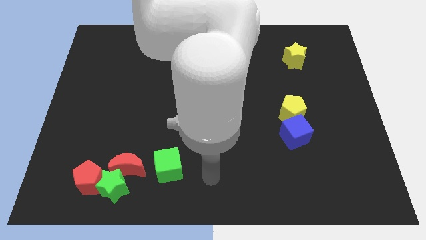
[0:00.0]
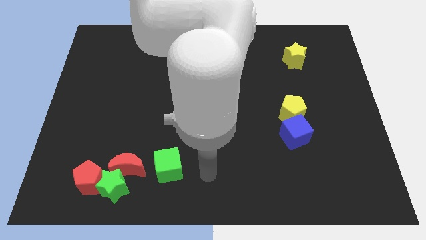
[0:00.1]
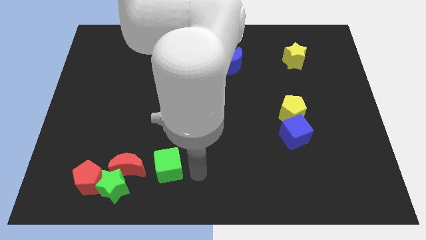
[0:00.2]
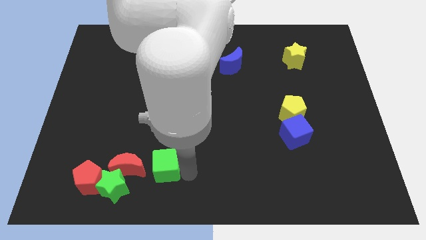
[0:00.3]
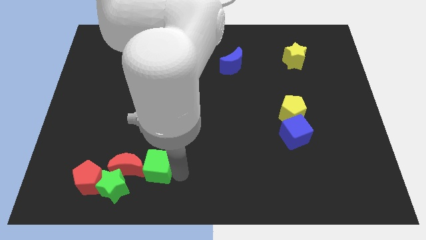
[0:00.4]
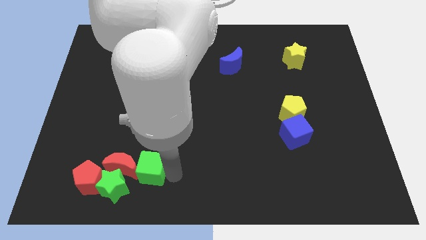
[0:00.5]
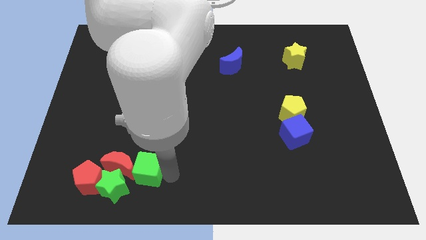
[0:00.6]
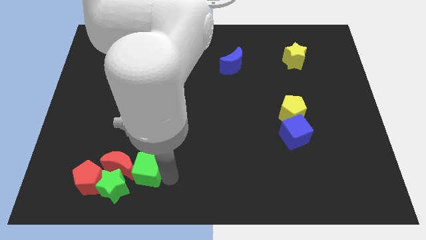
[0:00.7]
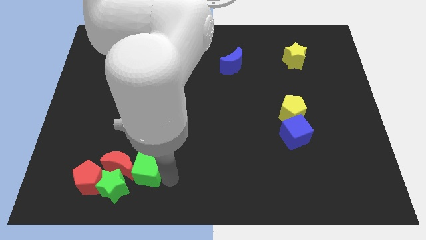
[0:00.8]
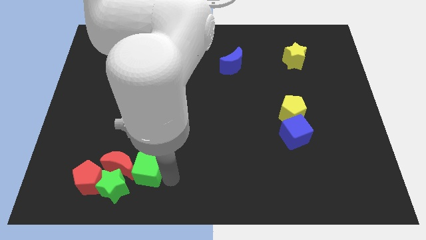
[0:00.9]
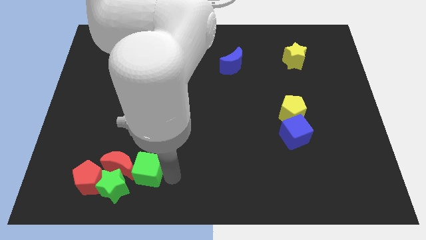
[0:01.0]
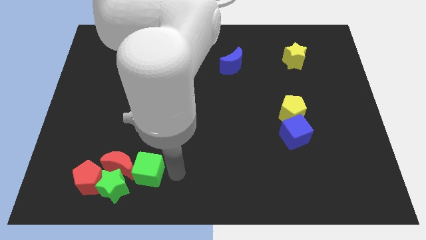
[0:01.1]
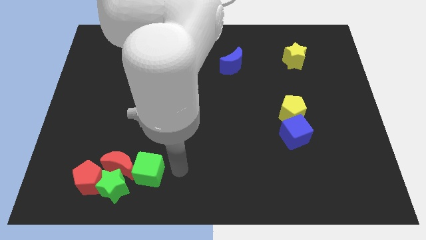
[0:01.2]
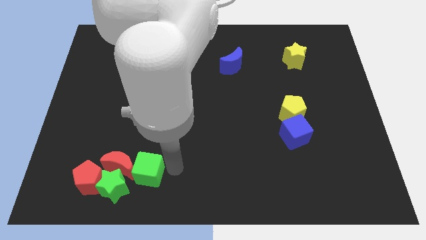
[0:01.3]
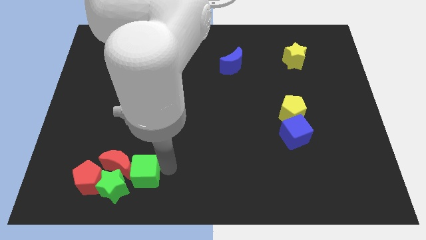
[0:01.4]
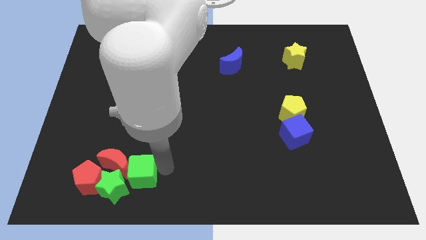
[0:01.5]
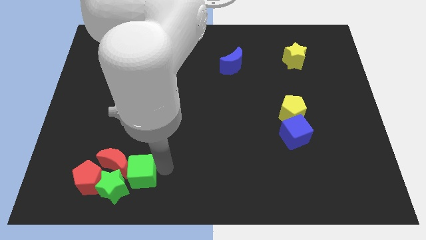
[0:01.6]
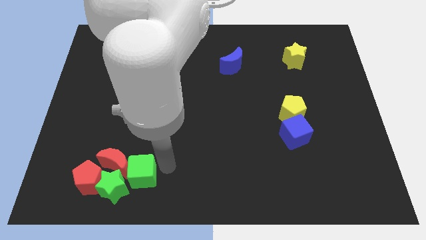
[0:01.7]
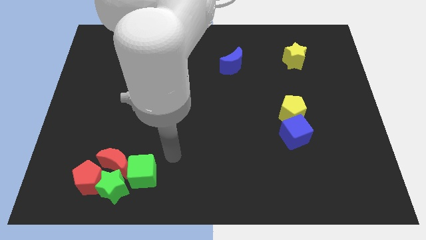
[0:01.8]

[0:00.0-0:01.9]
push the green cube into the red moon

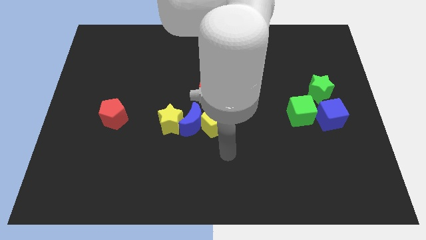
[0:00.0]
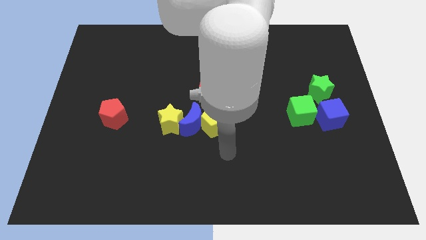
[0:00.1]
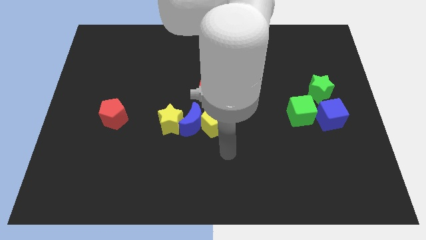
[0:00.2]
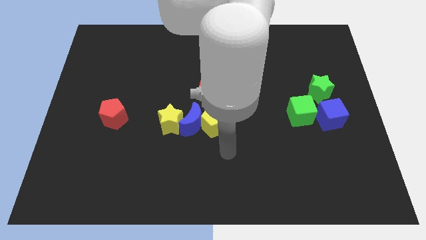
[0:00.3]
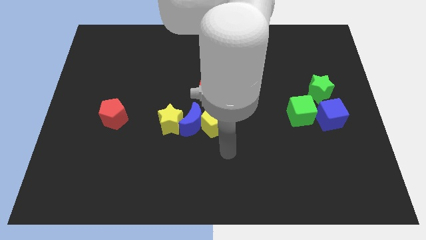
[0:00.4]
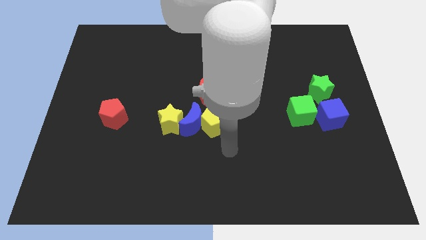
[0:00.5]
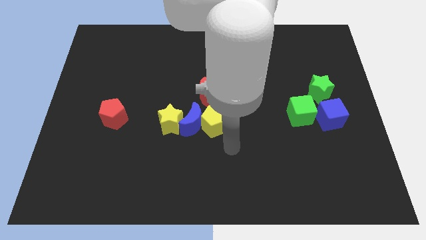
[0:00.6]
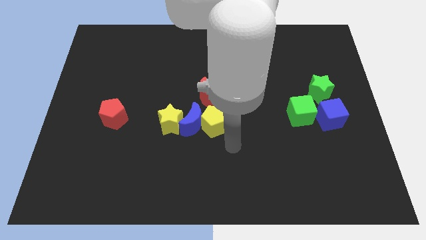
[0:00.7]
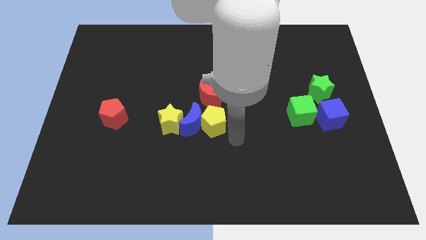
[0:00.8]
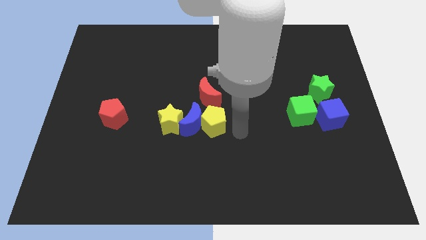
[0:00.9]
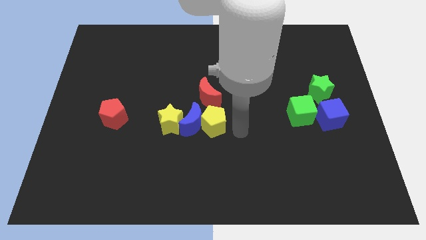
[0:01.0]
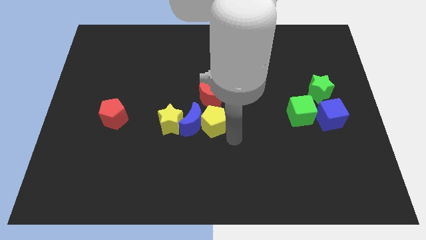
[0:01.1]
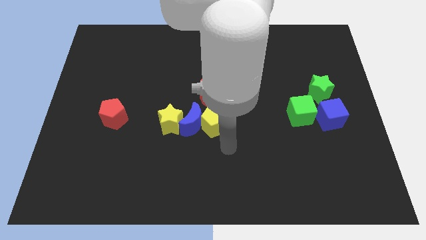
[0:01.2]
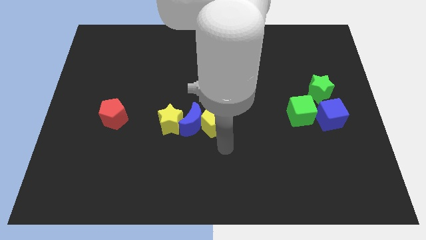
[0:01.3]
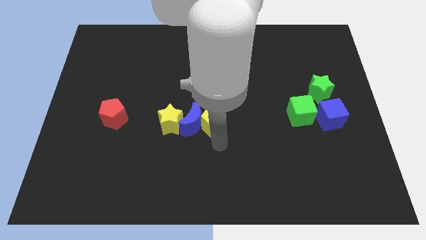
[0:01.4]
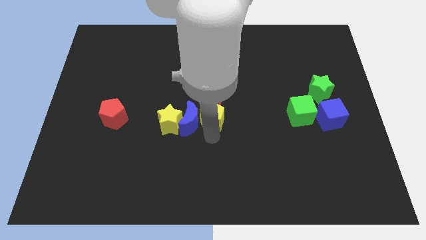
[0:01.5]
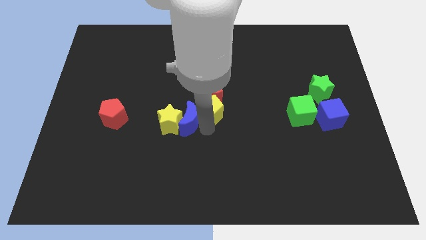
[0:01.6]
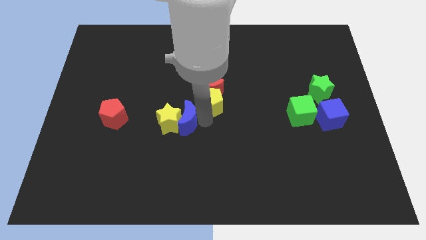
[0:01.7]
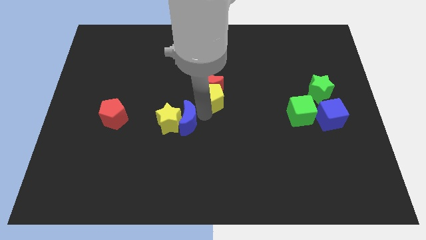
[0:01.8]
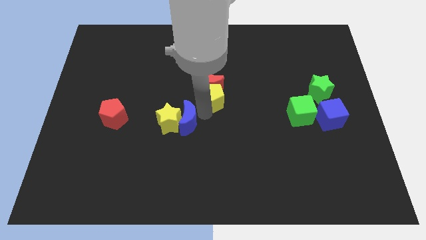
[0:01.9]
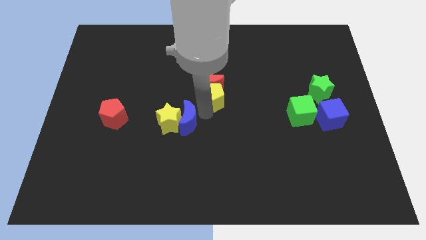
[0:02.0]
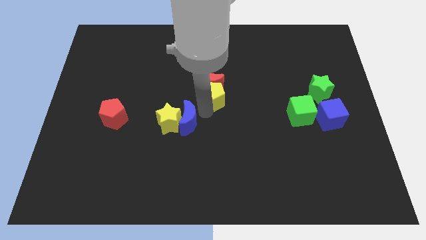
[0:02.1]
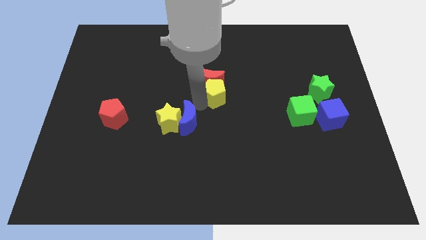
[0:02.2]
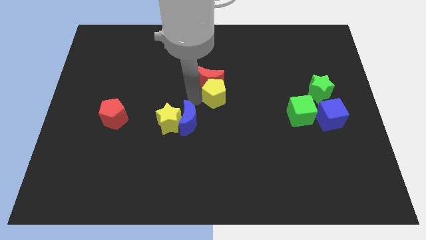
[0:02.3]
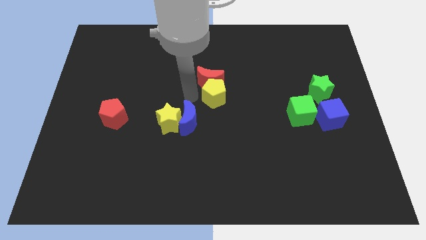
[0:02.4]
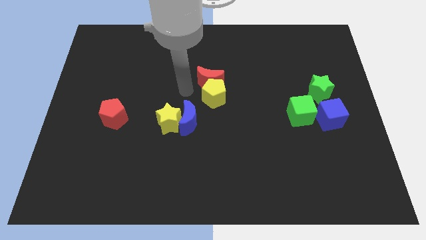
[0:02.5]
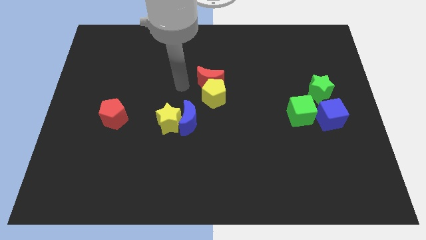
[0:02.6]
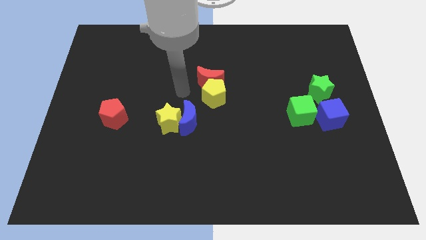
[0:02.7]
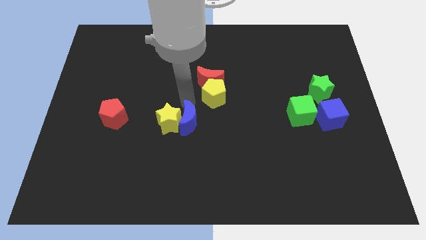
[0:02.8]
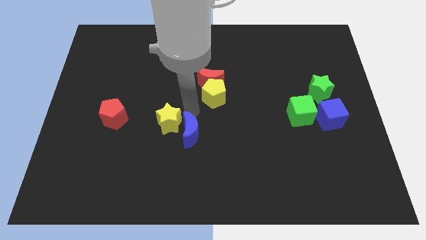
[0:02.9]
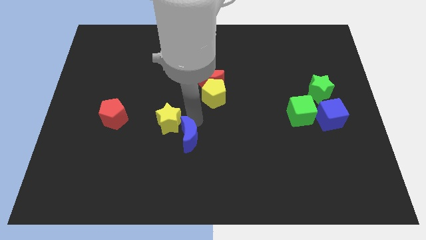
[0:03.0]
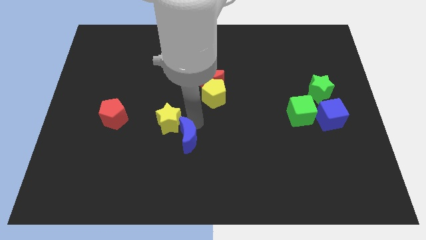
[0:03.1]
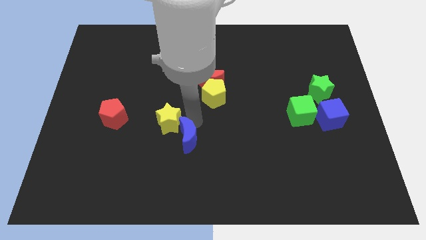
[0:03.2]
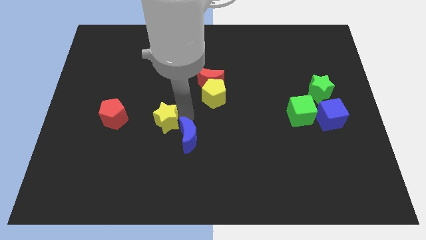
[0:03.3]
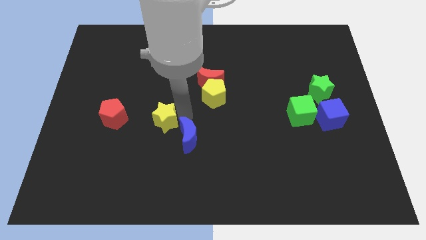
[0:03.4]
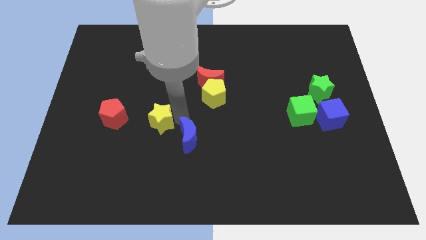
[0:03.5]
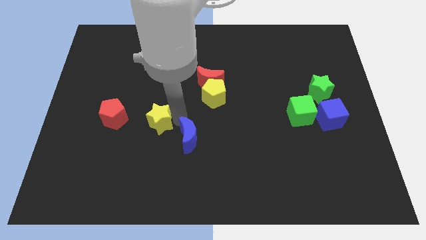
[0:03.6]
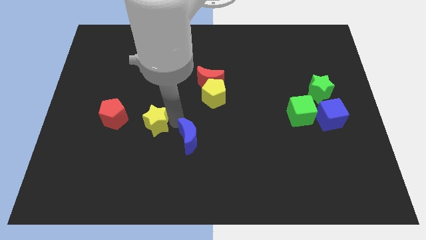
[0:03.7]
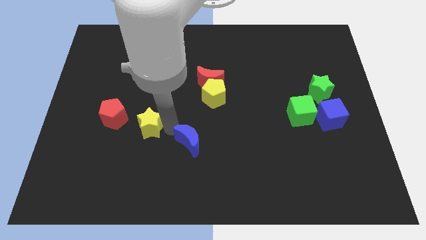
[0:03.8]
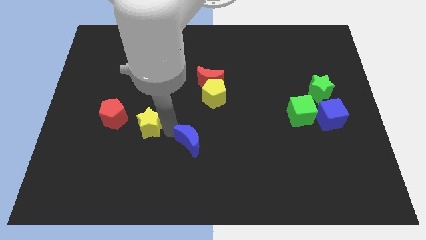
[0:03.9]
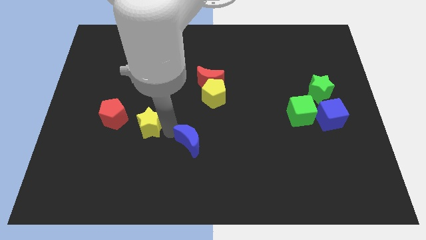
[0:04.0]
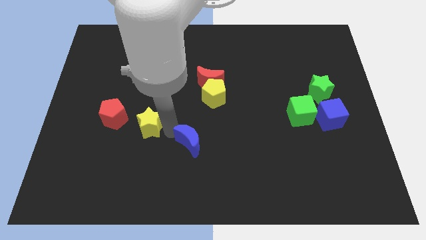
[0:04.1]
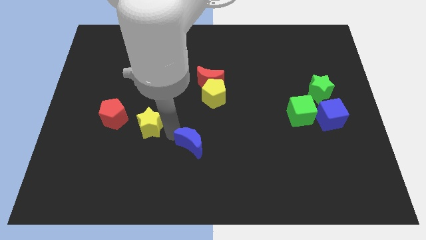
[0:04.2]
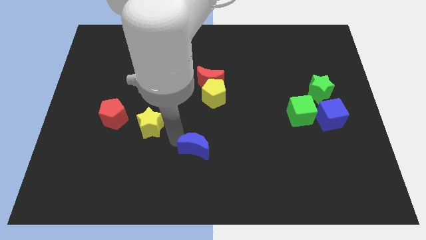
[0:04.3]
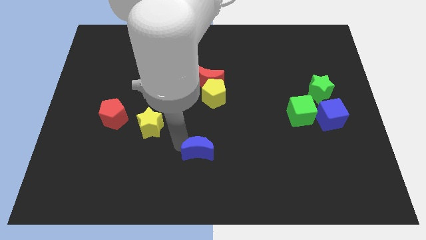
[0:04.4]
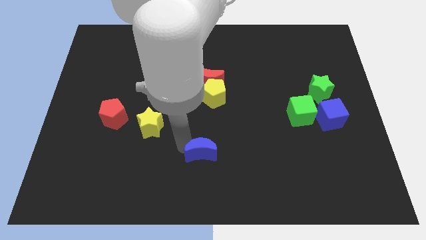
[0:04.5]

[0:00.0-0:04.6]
push the yellow pentagon into the red crescent

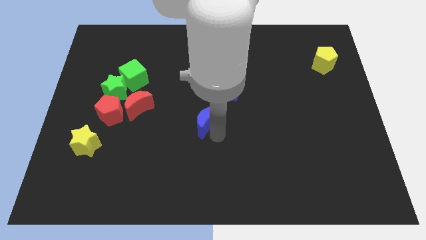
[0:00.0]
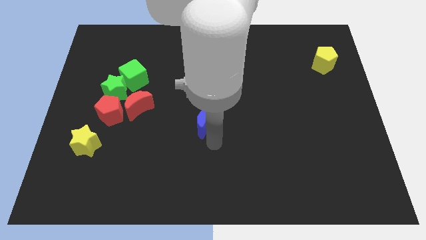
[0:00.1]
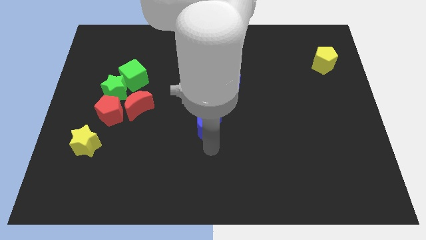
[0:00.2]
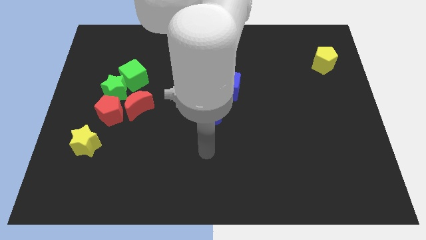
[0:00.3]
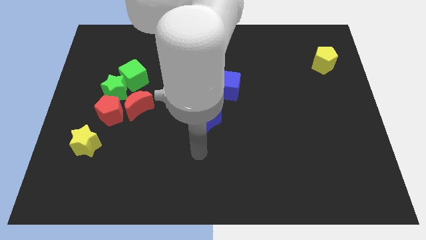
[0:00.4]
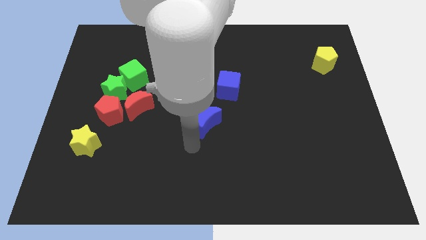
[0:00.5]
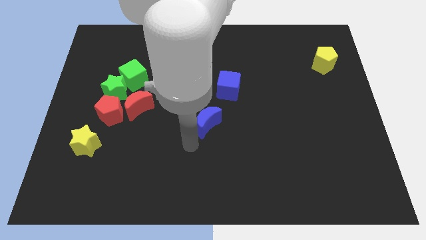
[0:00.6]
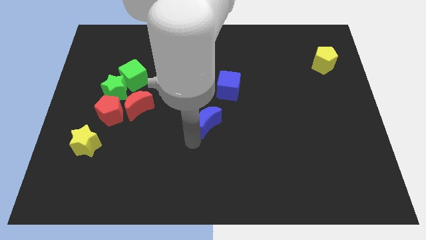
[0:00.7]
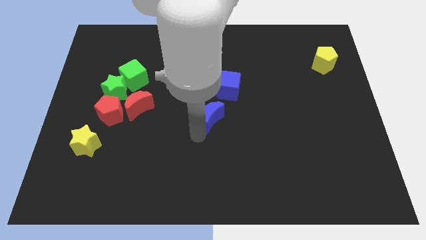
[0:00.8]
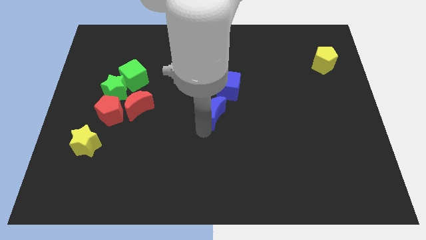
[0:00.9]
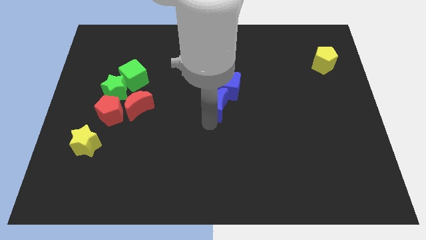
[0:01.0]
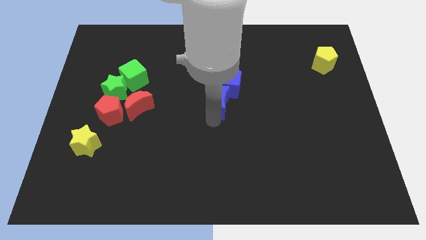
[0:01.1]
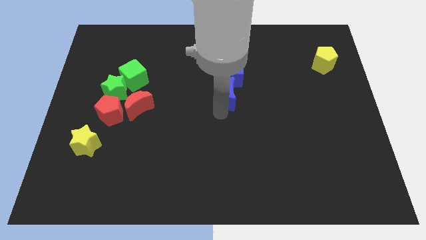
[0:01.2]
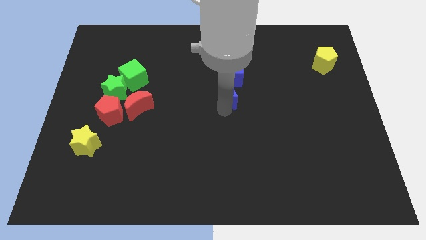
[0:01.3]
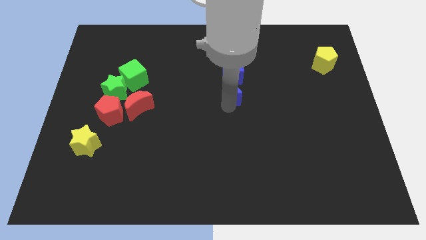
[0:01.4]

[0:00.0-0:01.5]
push the blue moon into the blue cube

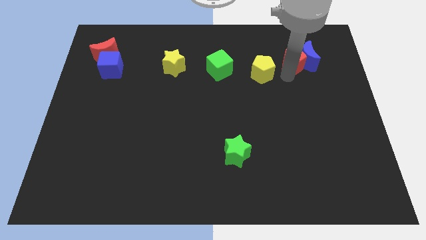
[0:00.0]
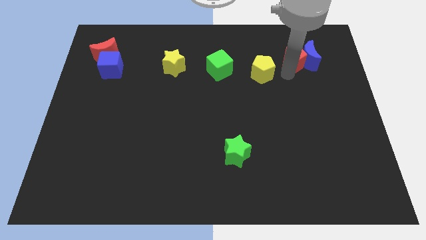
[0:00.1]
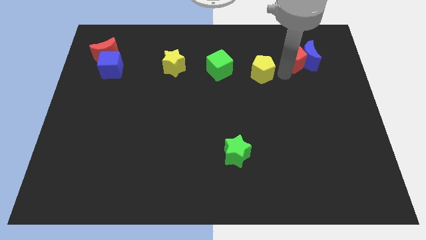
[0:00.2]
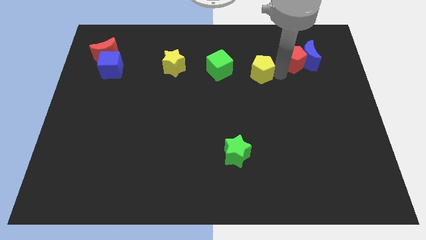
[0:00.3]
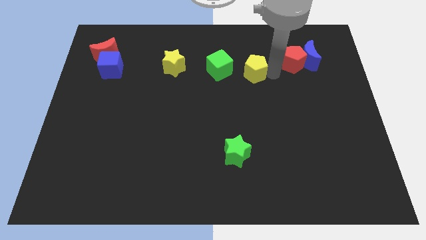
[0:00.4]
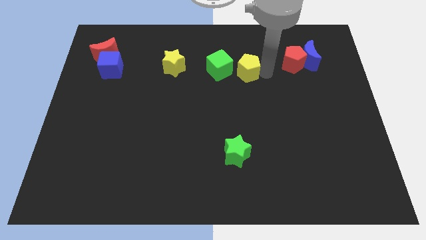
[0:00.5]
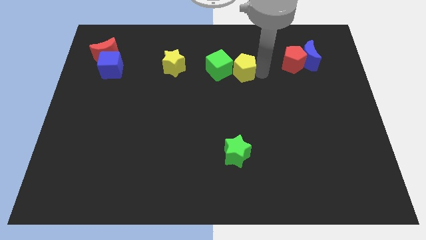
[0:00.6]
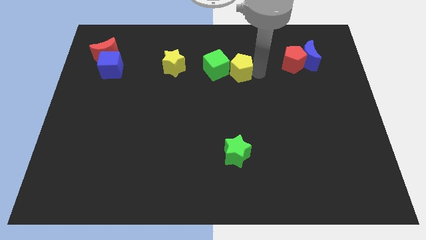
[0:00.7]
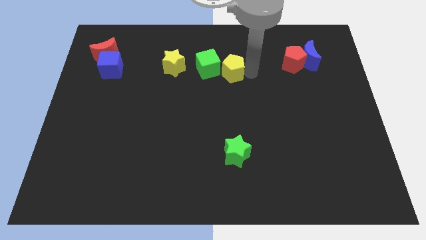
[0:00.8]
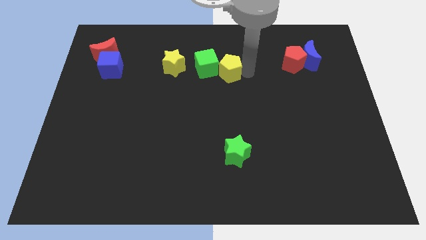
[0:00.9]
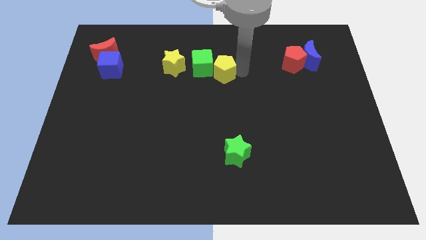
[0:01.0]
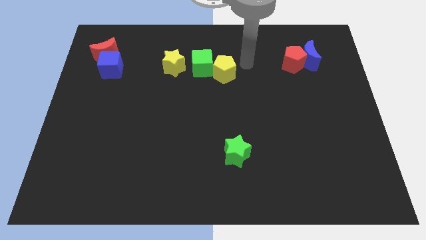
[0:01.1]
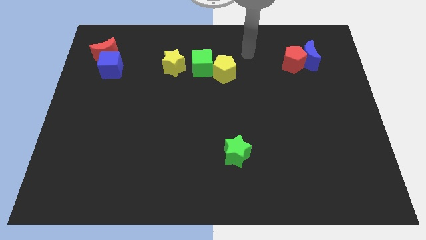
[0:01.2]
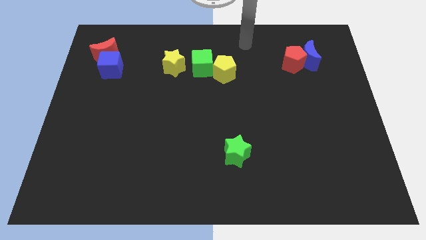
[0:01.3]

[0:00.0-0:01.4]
push the yellow pentagon to the right of the green cube

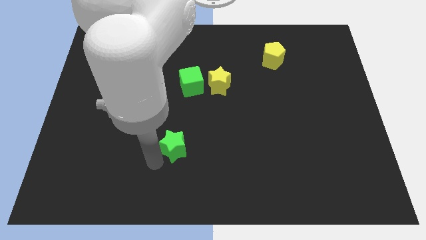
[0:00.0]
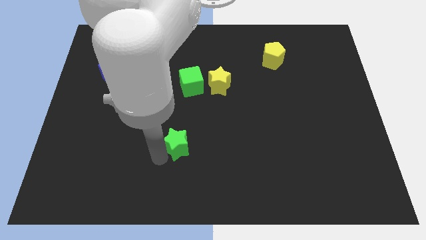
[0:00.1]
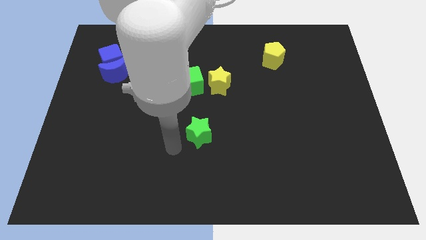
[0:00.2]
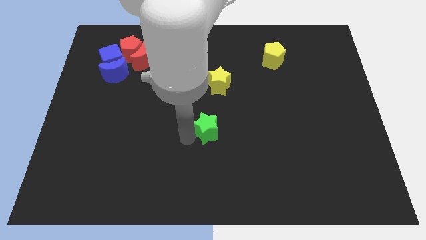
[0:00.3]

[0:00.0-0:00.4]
move the green star towards the centre of the board
